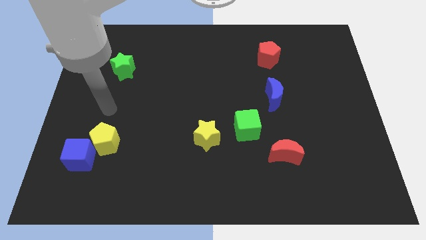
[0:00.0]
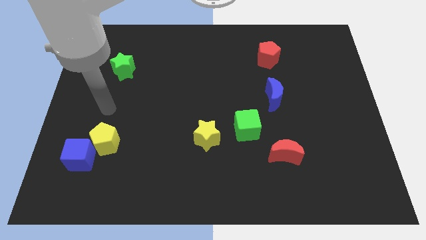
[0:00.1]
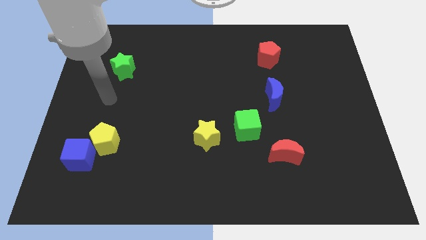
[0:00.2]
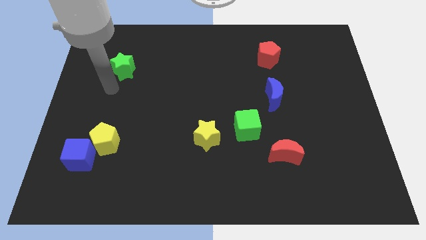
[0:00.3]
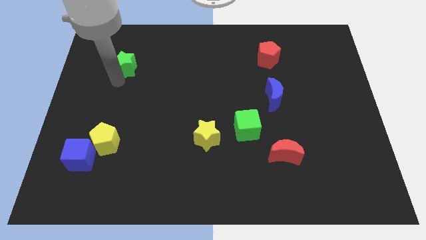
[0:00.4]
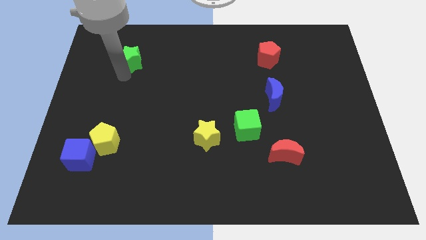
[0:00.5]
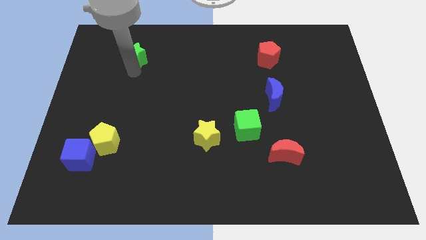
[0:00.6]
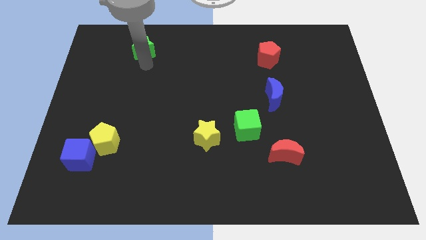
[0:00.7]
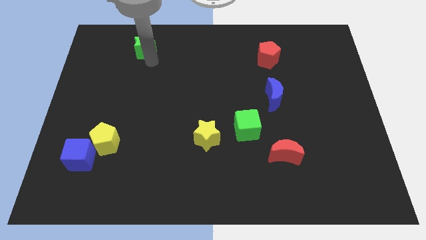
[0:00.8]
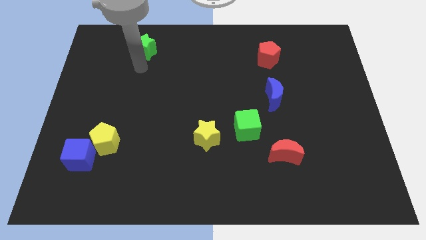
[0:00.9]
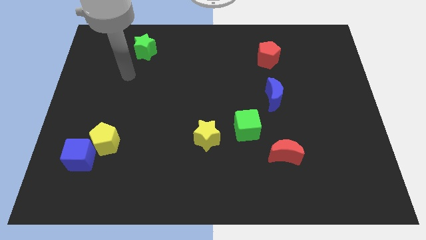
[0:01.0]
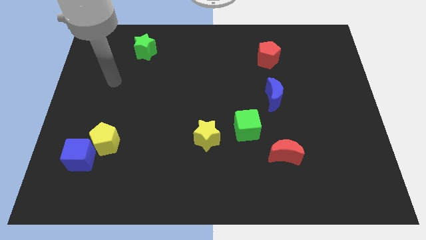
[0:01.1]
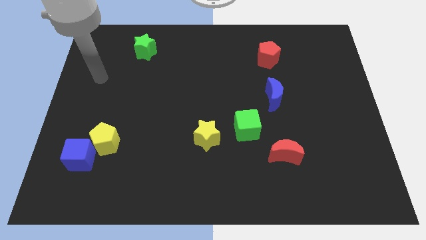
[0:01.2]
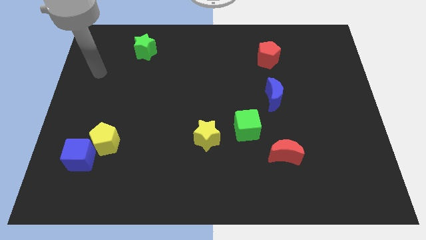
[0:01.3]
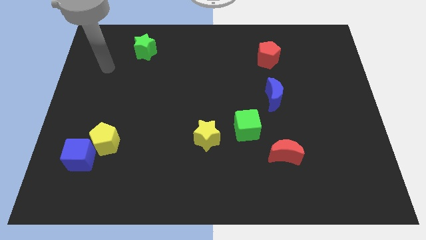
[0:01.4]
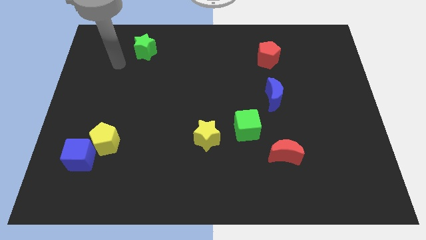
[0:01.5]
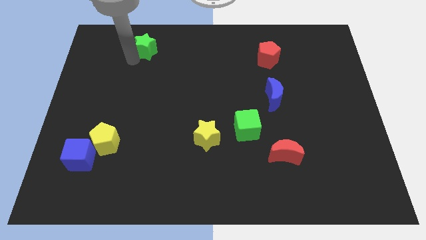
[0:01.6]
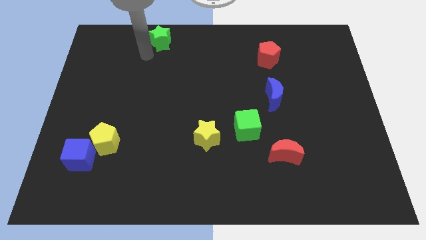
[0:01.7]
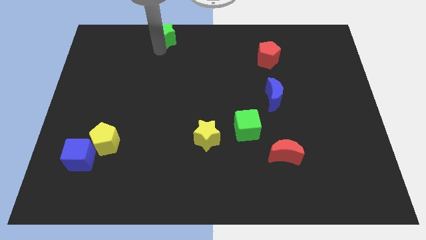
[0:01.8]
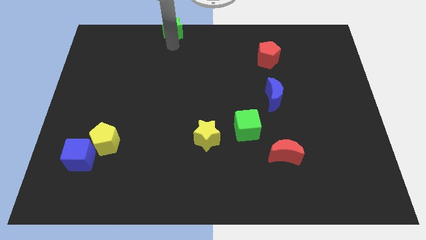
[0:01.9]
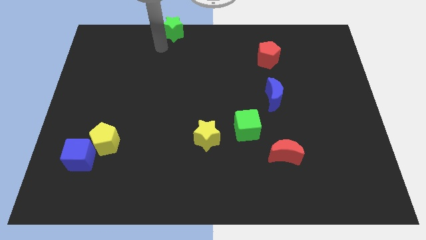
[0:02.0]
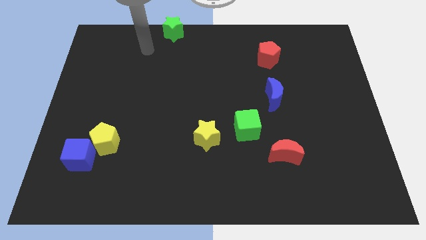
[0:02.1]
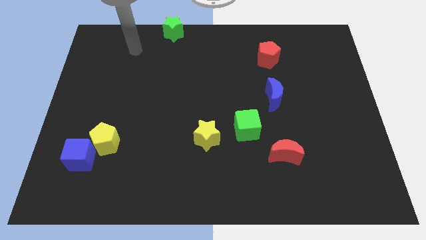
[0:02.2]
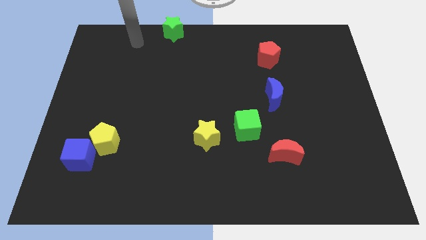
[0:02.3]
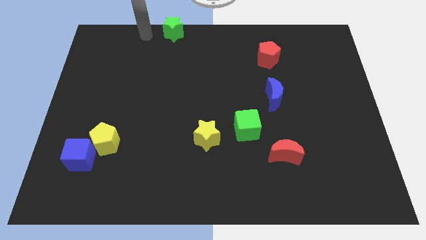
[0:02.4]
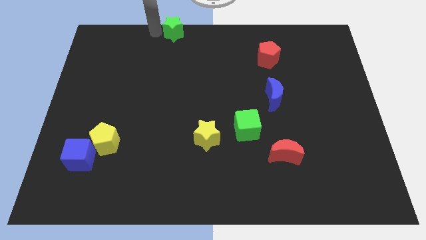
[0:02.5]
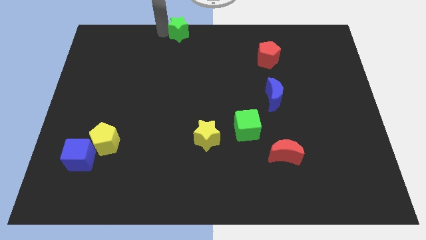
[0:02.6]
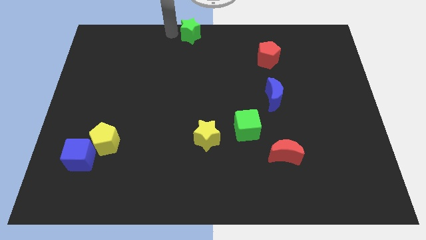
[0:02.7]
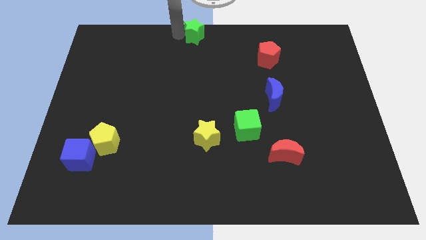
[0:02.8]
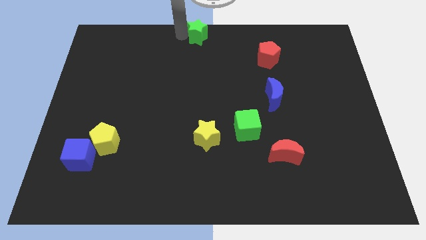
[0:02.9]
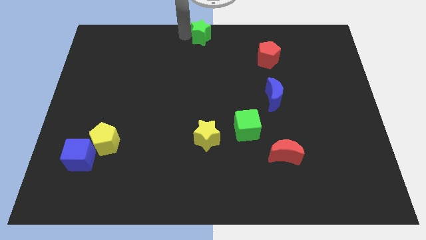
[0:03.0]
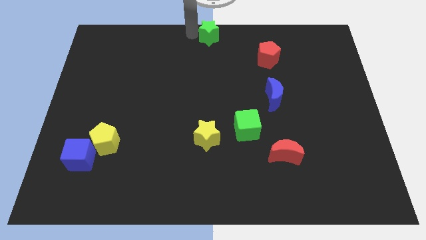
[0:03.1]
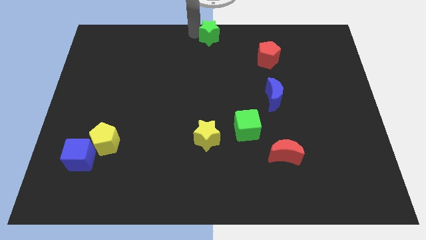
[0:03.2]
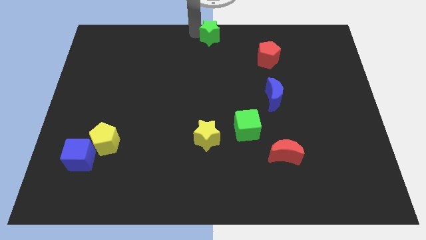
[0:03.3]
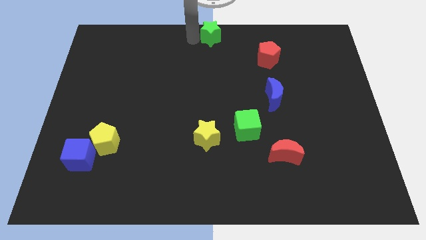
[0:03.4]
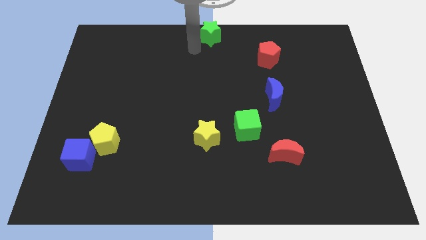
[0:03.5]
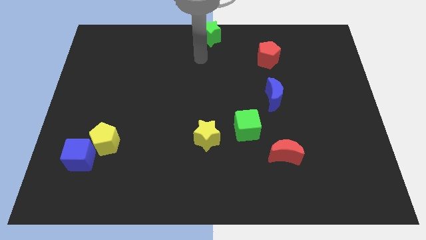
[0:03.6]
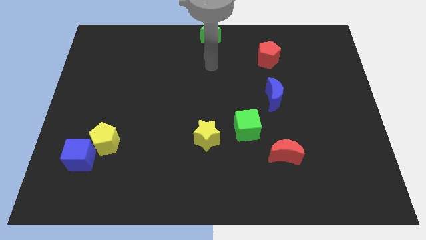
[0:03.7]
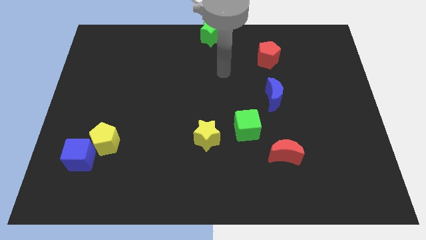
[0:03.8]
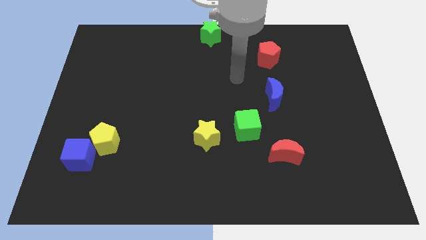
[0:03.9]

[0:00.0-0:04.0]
push the green star to the top center of the board

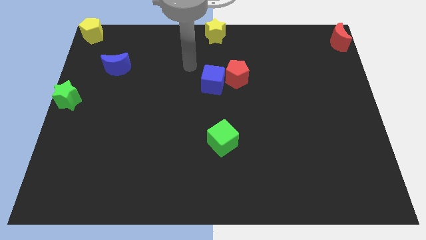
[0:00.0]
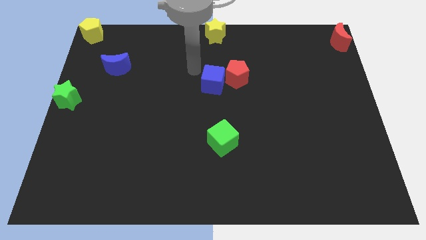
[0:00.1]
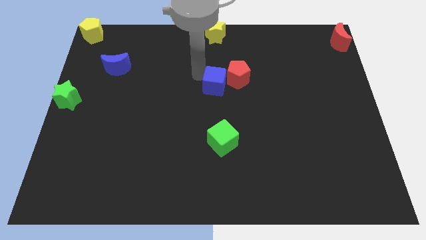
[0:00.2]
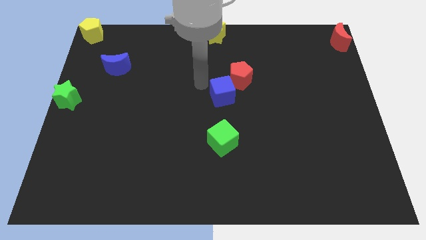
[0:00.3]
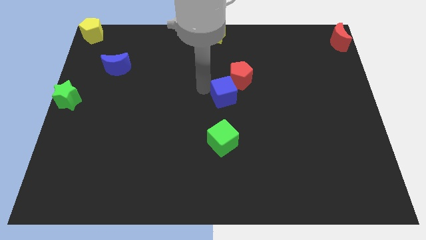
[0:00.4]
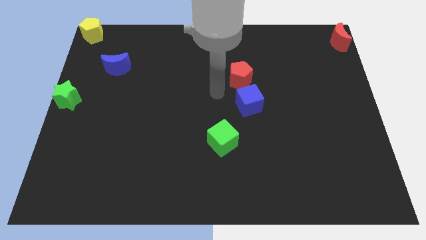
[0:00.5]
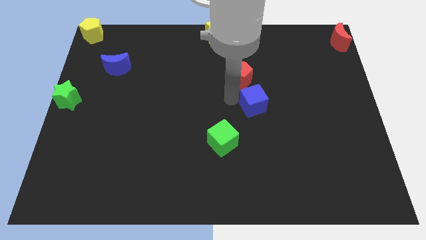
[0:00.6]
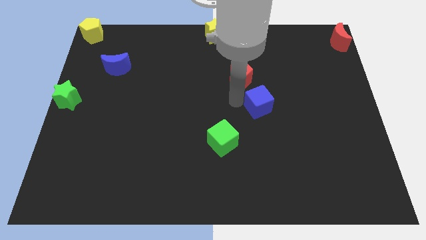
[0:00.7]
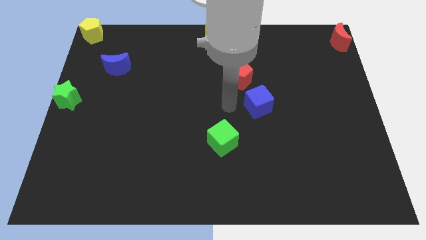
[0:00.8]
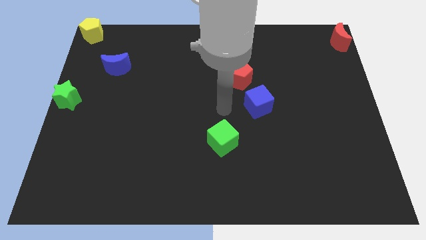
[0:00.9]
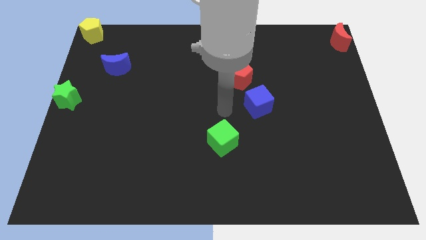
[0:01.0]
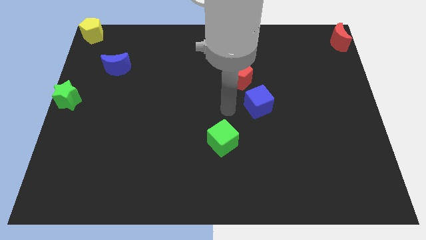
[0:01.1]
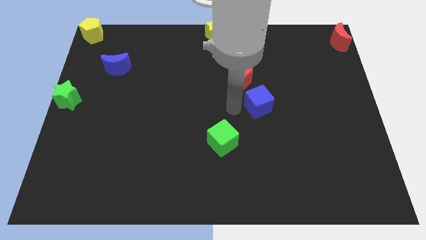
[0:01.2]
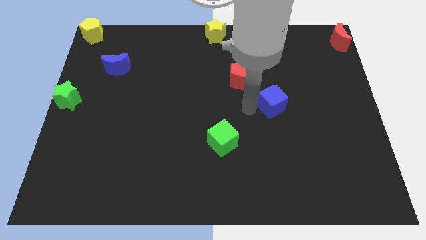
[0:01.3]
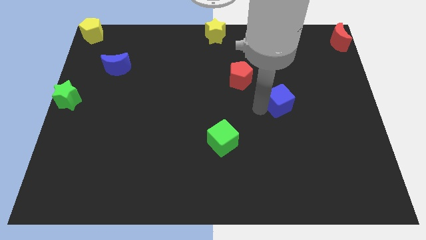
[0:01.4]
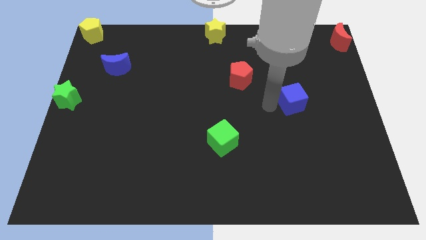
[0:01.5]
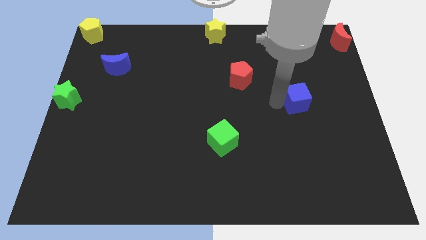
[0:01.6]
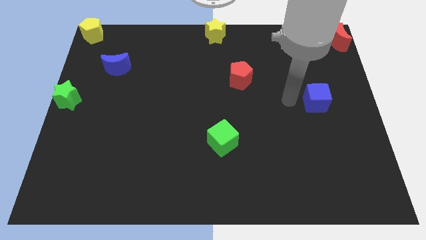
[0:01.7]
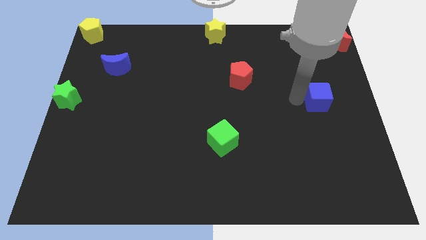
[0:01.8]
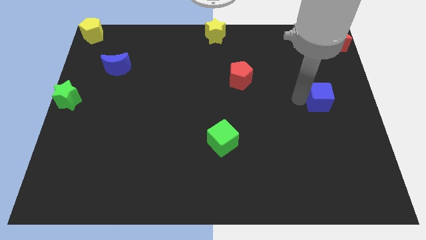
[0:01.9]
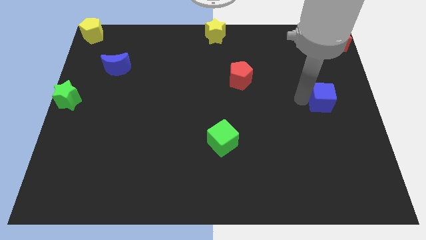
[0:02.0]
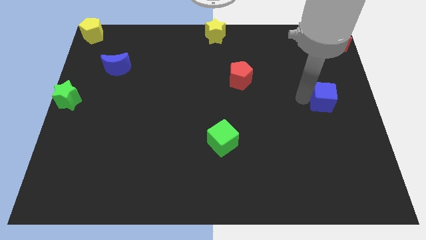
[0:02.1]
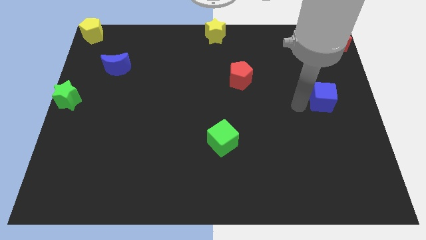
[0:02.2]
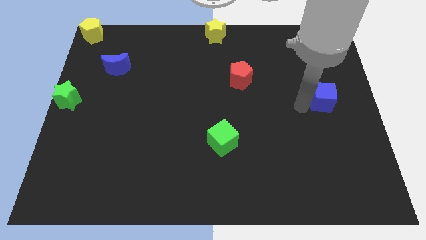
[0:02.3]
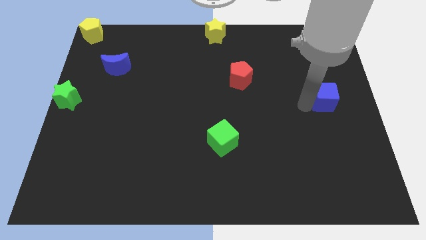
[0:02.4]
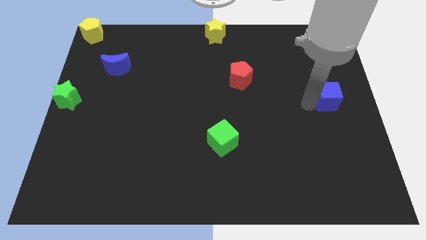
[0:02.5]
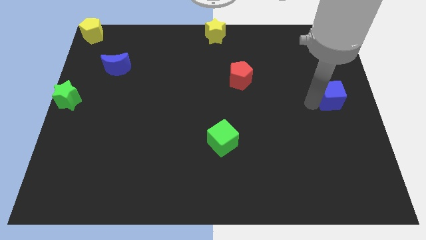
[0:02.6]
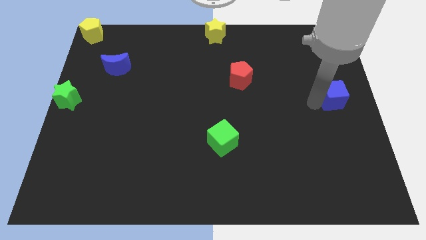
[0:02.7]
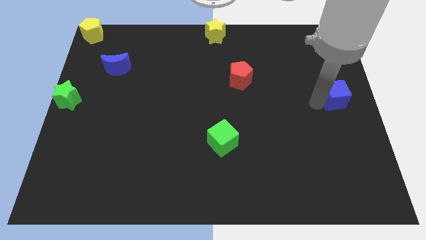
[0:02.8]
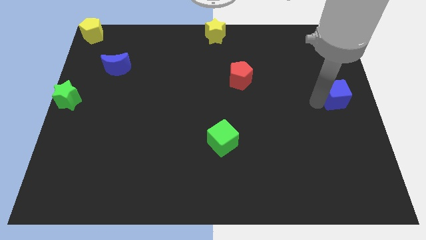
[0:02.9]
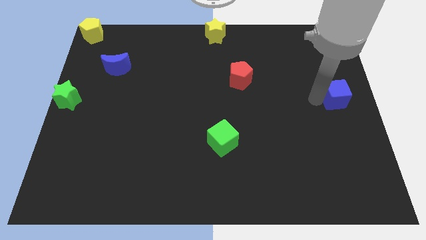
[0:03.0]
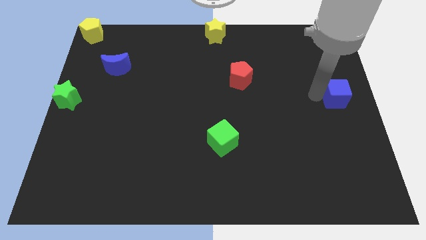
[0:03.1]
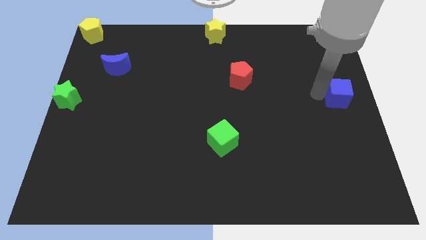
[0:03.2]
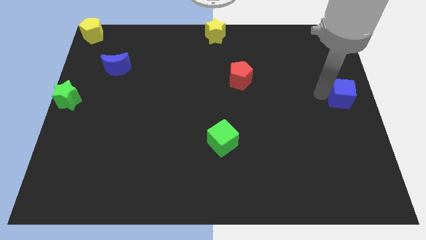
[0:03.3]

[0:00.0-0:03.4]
place the blue cube to the center right side of the board

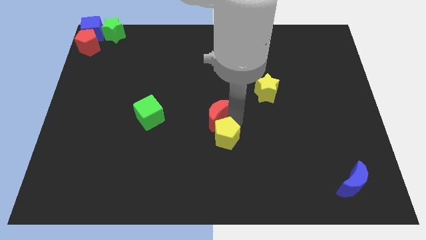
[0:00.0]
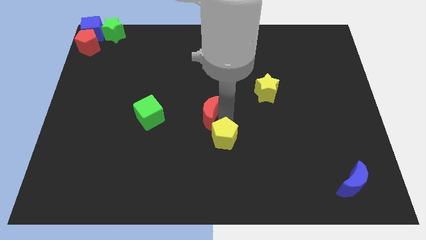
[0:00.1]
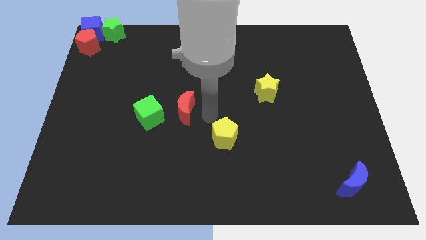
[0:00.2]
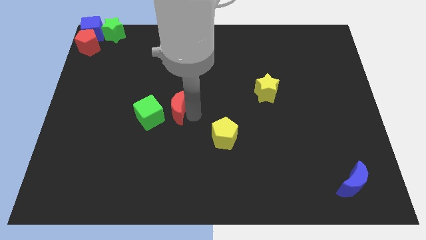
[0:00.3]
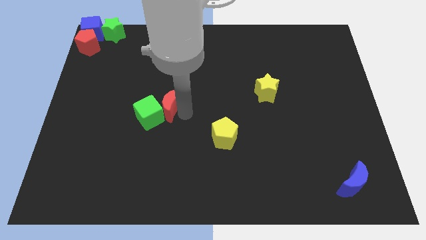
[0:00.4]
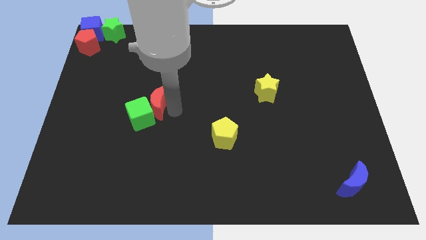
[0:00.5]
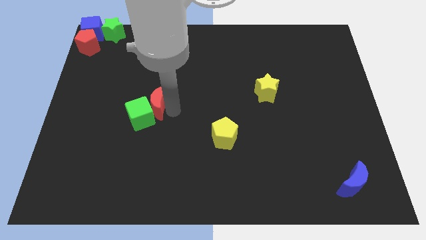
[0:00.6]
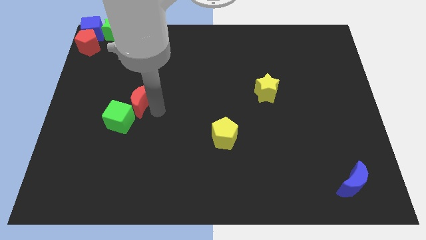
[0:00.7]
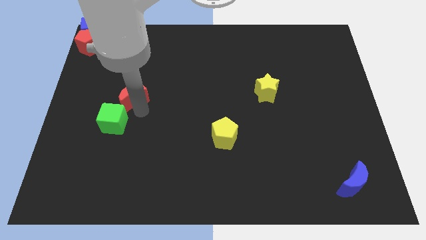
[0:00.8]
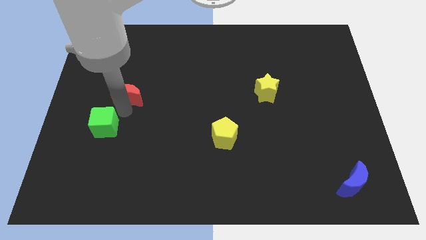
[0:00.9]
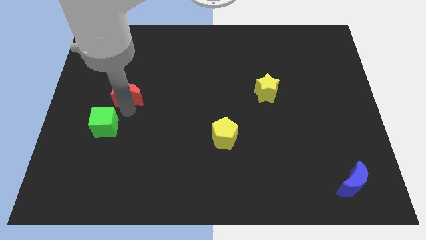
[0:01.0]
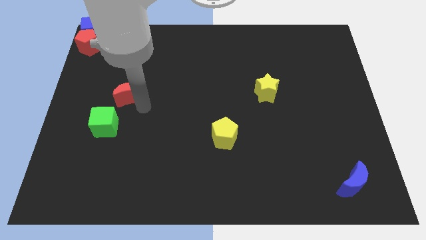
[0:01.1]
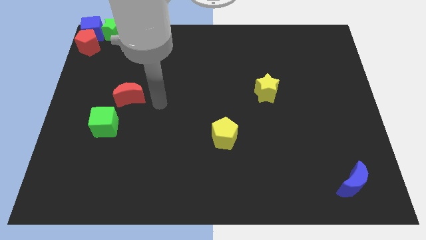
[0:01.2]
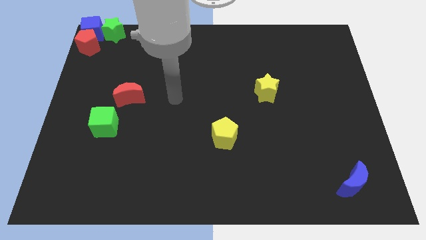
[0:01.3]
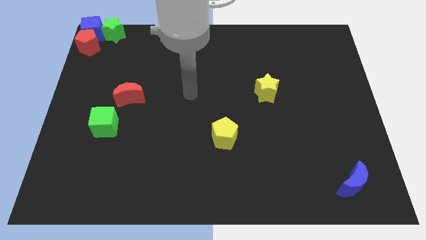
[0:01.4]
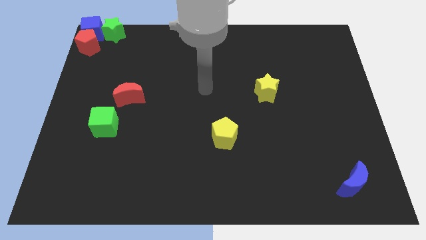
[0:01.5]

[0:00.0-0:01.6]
move the red moon to the top right side of the green cube

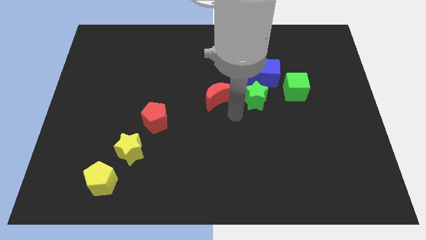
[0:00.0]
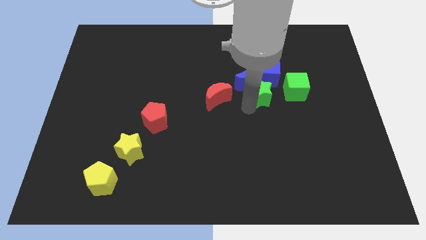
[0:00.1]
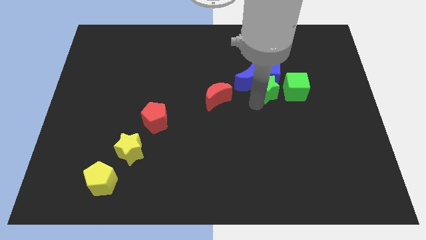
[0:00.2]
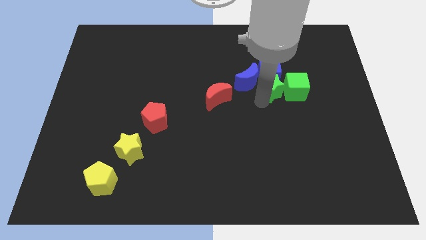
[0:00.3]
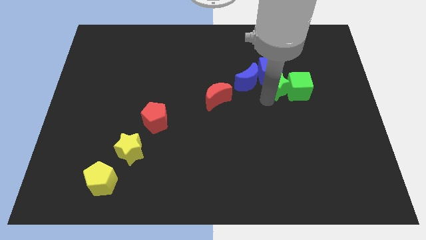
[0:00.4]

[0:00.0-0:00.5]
place green star below blue cube
